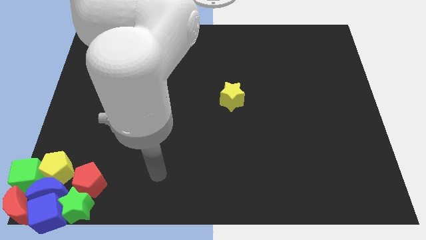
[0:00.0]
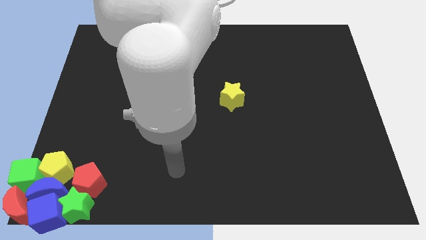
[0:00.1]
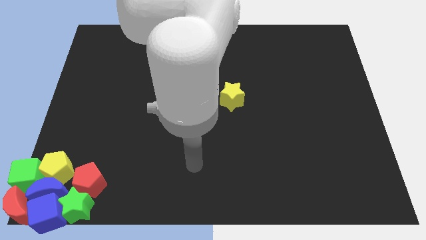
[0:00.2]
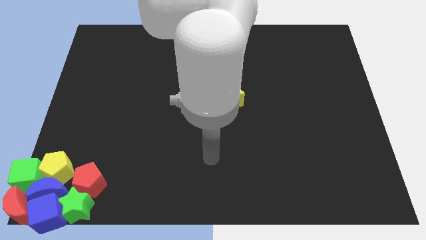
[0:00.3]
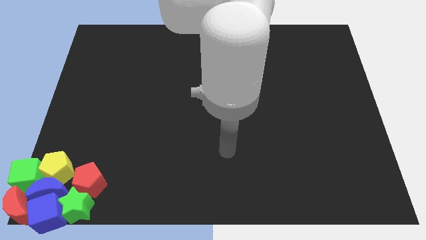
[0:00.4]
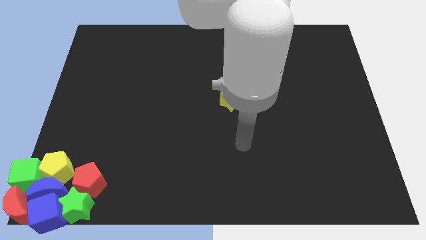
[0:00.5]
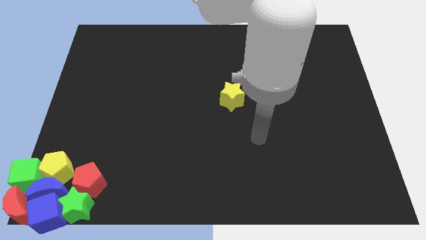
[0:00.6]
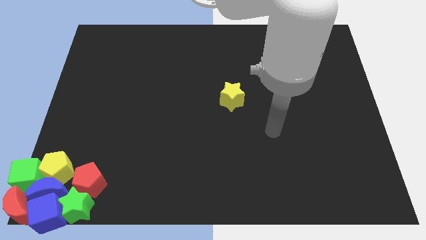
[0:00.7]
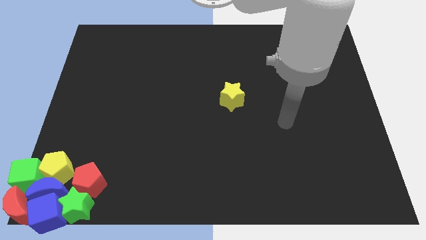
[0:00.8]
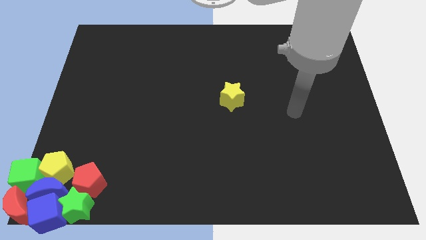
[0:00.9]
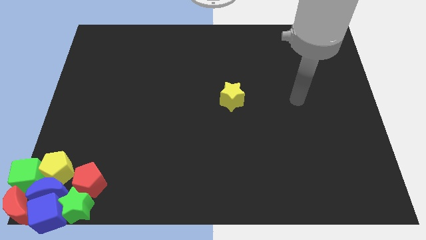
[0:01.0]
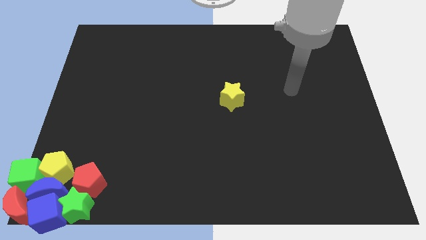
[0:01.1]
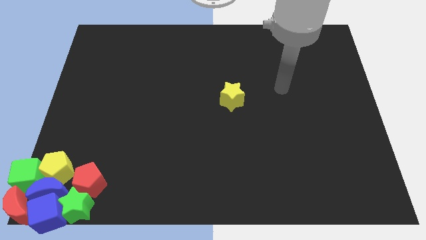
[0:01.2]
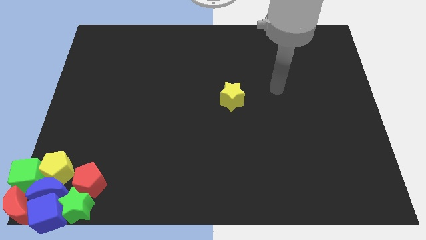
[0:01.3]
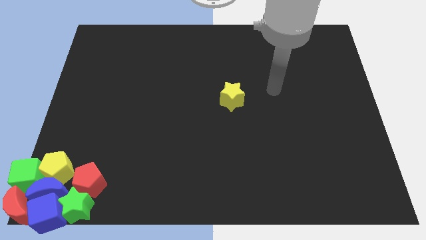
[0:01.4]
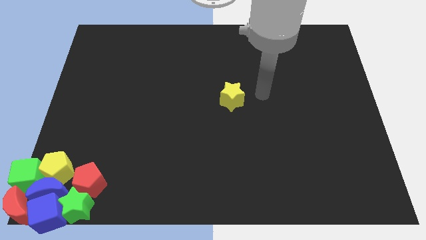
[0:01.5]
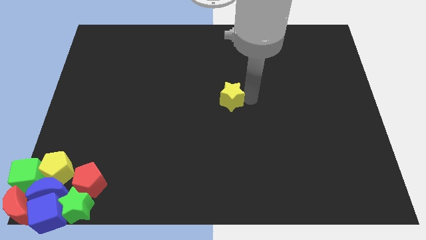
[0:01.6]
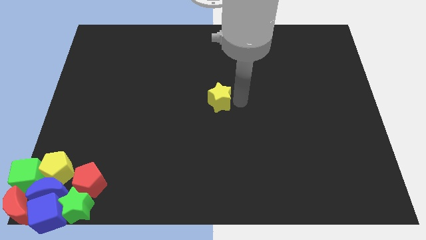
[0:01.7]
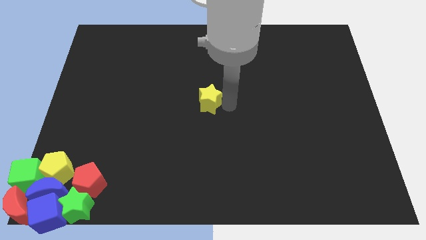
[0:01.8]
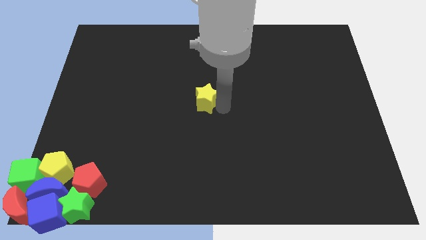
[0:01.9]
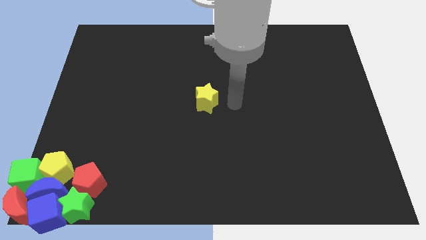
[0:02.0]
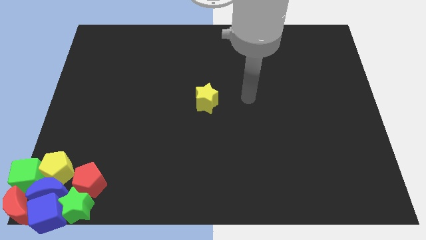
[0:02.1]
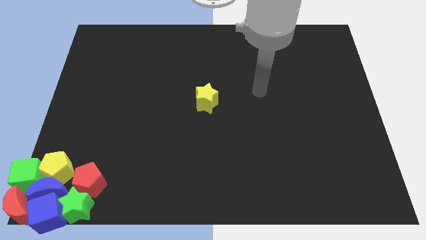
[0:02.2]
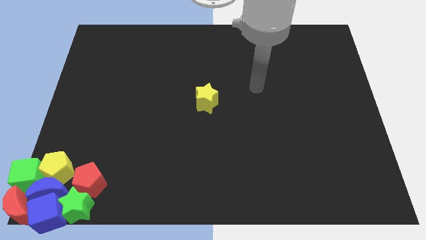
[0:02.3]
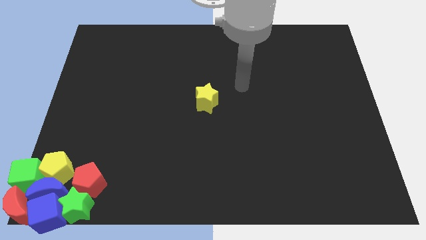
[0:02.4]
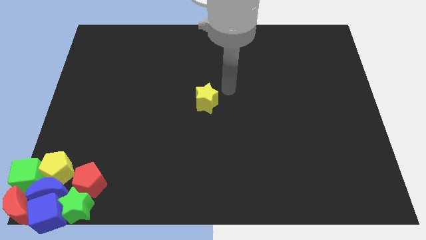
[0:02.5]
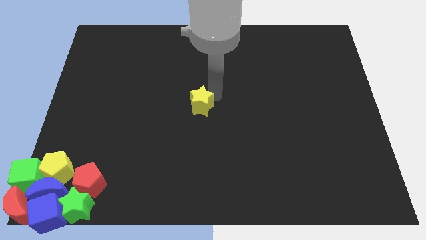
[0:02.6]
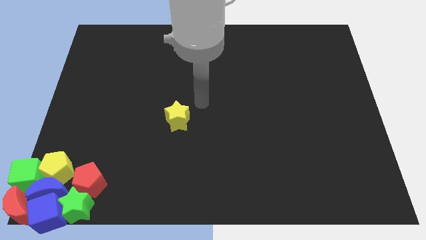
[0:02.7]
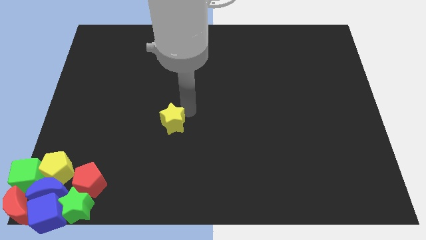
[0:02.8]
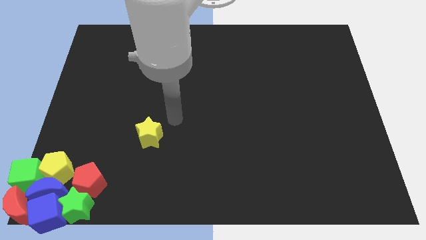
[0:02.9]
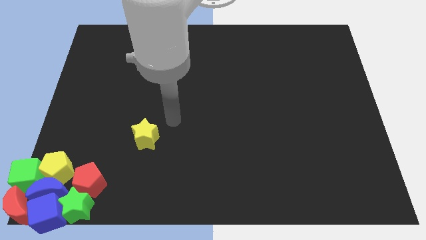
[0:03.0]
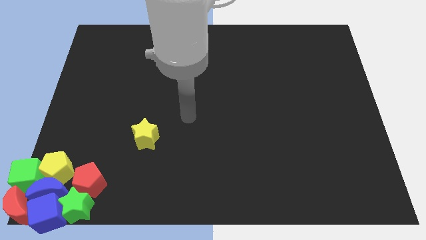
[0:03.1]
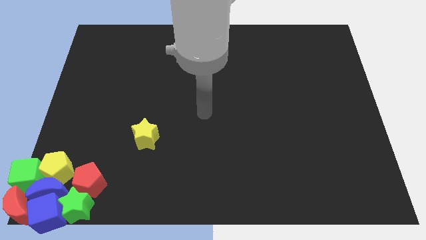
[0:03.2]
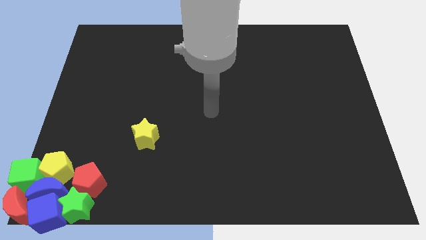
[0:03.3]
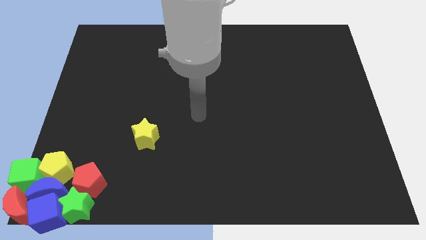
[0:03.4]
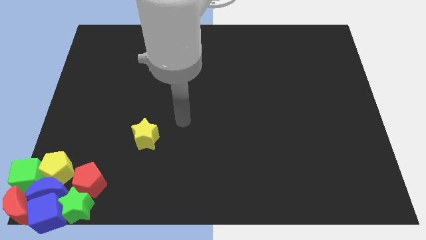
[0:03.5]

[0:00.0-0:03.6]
drag the yellow star diagonally on the top right side of the red pentagon

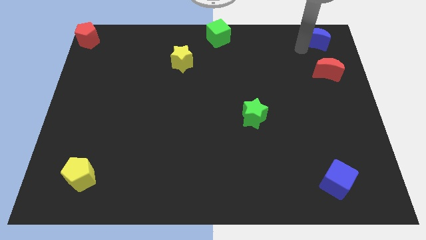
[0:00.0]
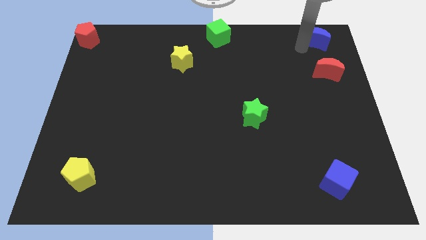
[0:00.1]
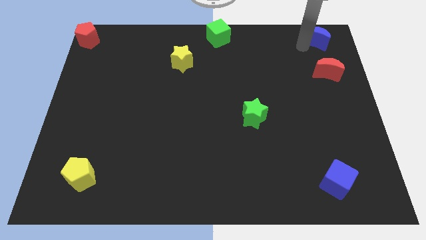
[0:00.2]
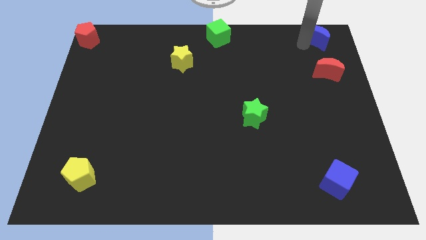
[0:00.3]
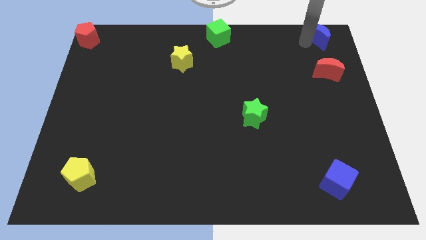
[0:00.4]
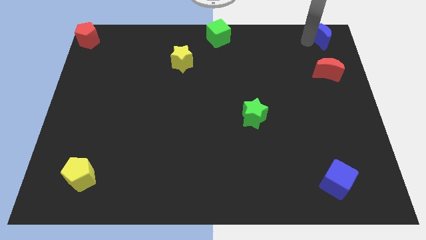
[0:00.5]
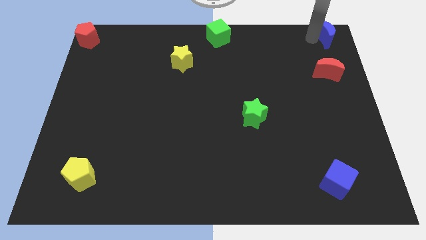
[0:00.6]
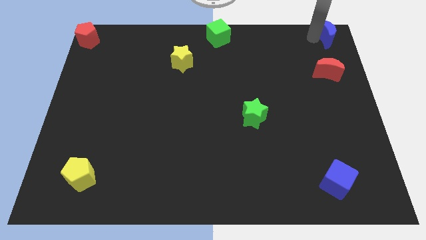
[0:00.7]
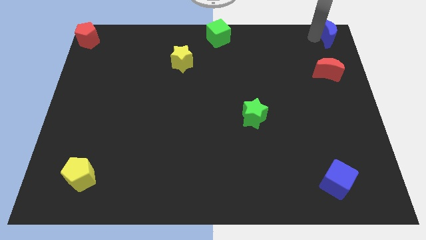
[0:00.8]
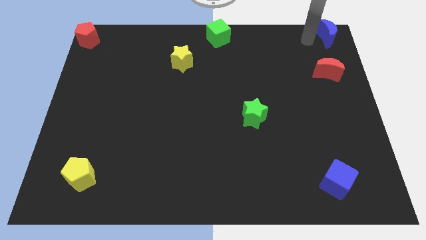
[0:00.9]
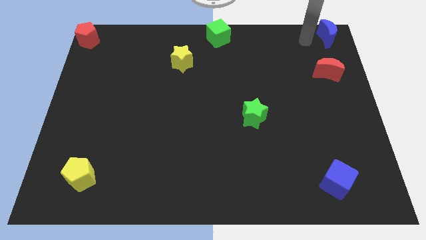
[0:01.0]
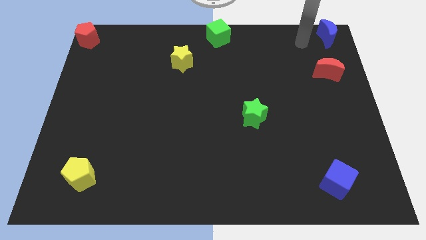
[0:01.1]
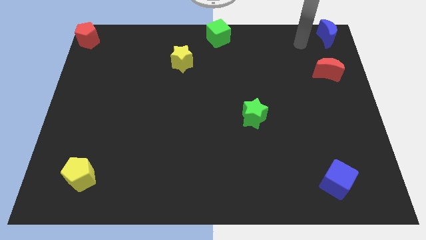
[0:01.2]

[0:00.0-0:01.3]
slide the blue moon to the top right corner

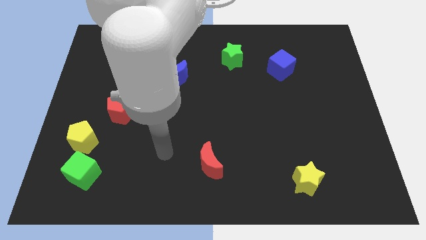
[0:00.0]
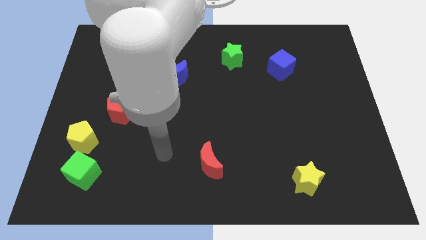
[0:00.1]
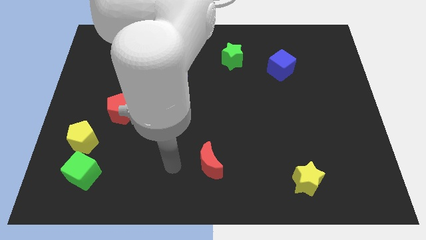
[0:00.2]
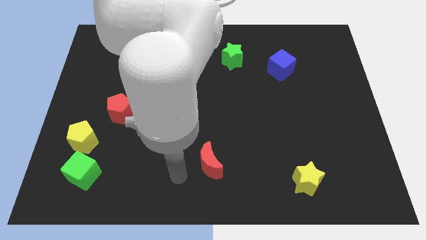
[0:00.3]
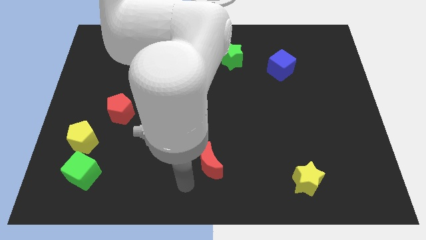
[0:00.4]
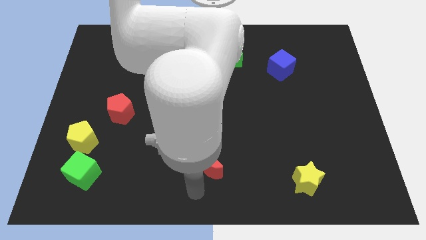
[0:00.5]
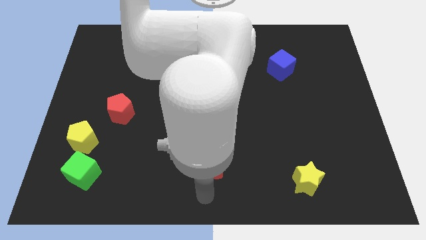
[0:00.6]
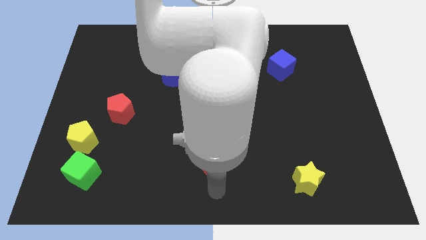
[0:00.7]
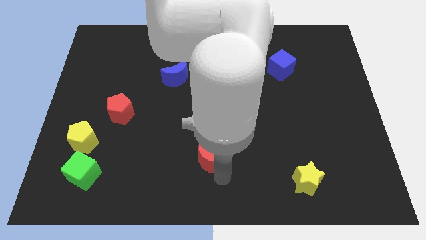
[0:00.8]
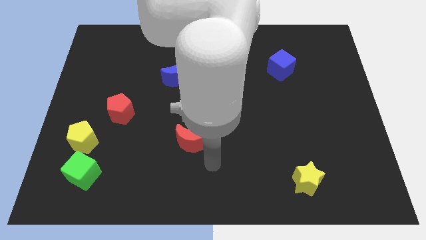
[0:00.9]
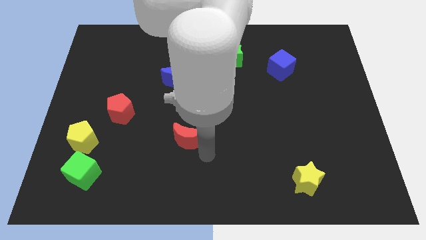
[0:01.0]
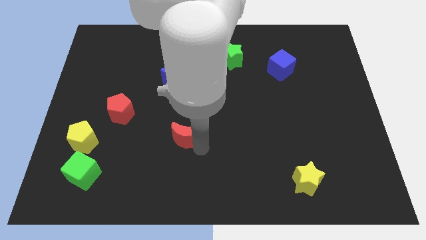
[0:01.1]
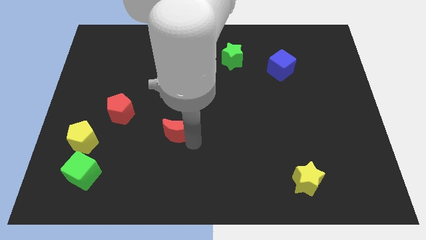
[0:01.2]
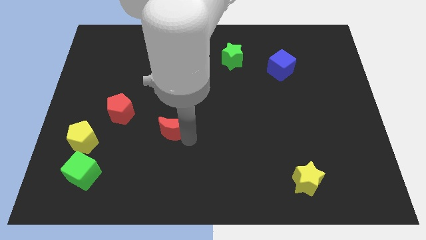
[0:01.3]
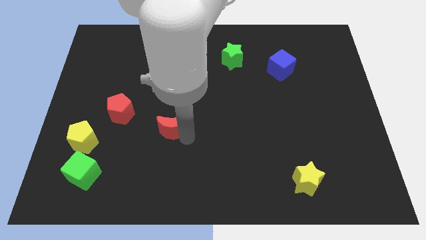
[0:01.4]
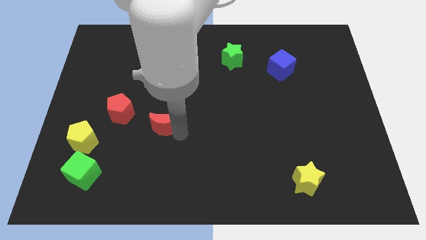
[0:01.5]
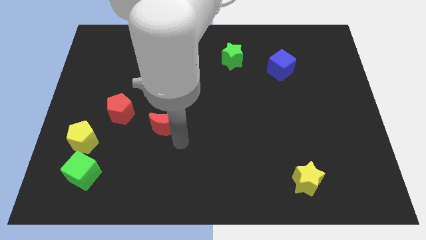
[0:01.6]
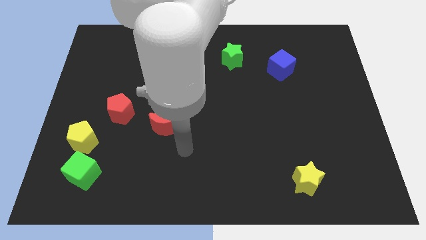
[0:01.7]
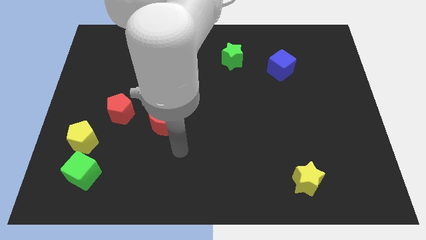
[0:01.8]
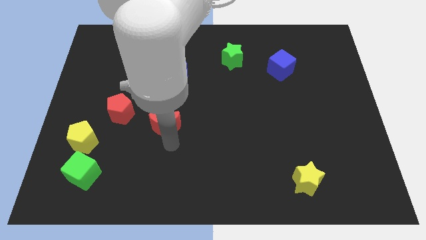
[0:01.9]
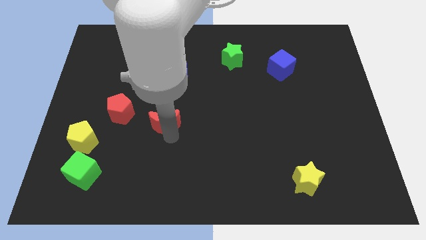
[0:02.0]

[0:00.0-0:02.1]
place the red moon towards red pentagon

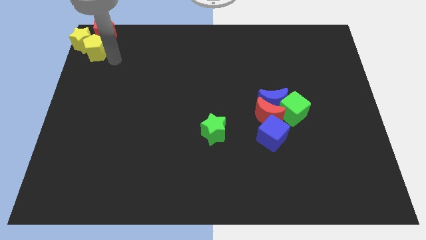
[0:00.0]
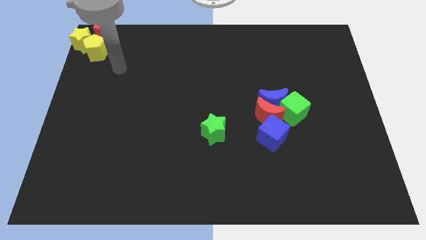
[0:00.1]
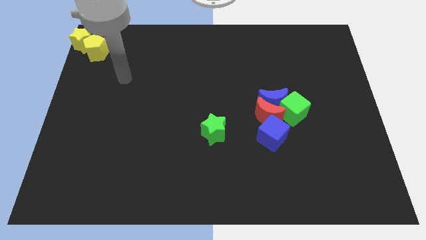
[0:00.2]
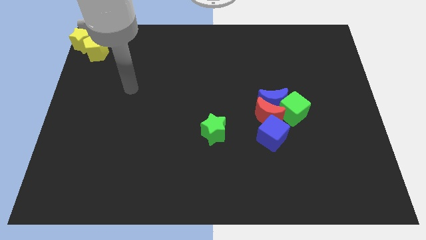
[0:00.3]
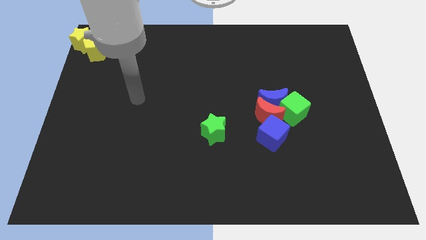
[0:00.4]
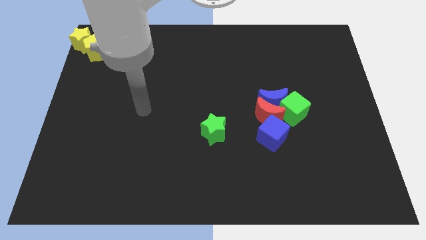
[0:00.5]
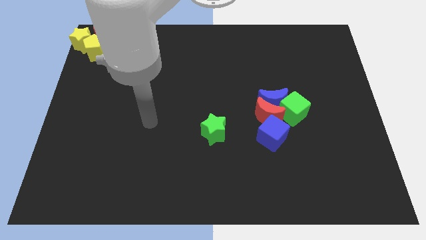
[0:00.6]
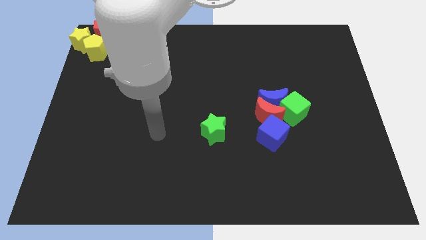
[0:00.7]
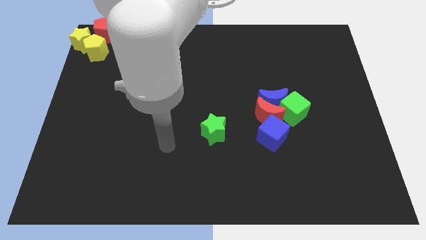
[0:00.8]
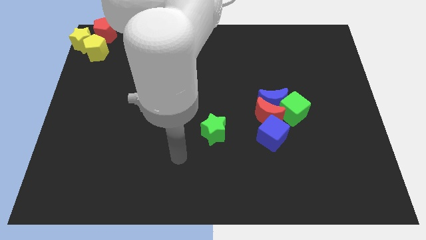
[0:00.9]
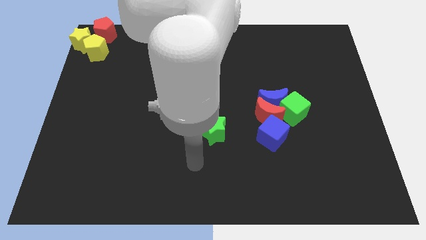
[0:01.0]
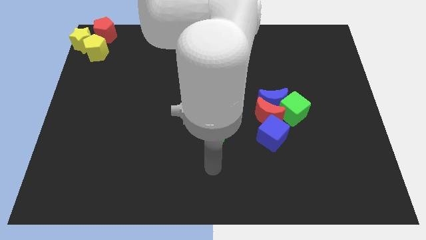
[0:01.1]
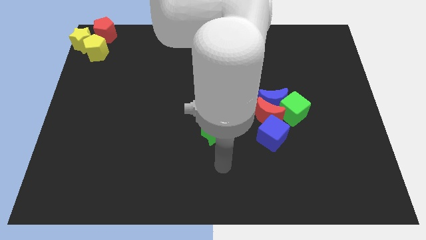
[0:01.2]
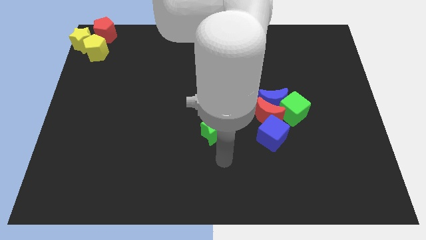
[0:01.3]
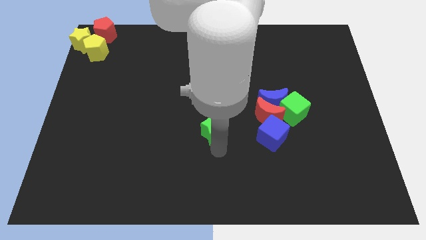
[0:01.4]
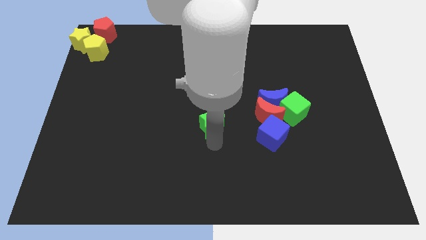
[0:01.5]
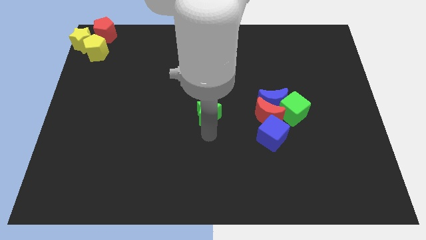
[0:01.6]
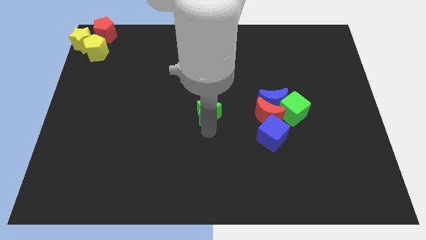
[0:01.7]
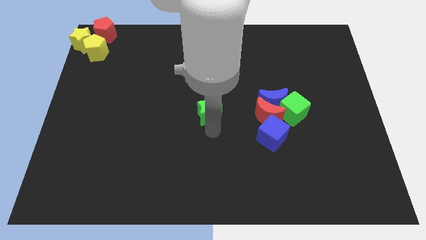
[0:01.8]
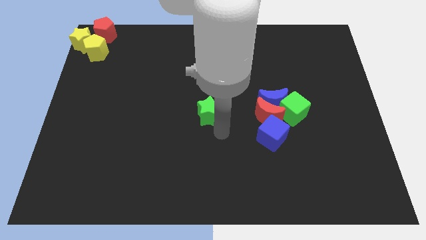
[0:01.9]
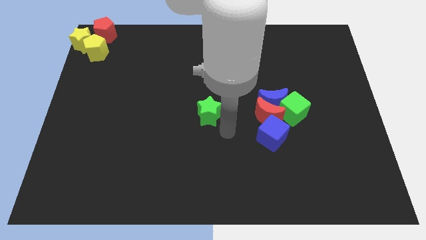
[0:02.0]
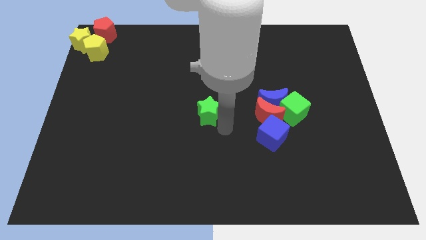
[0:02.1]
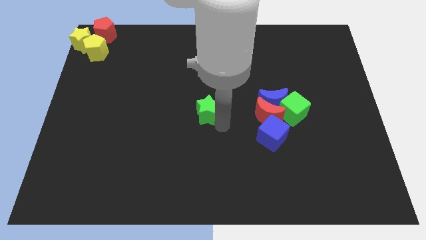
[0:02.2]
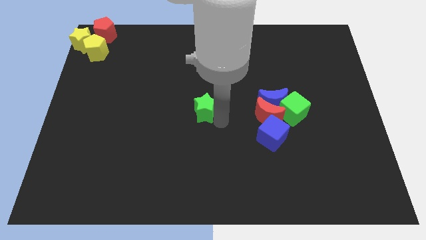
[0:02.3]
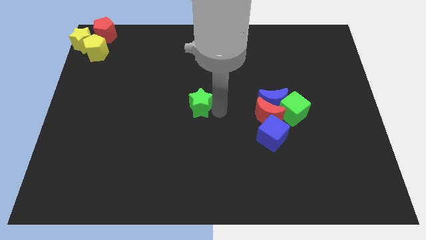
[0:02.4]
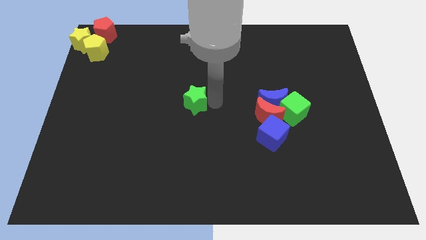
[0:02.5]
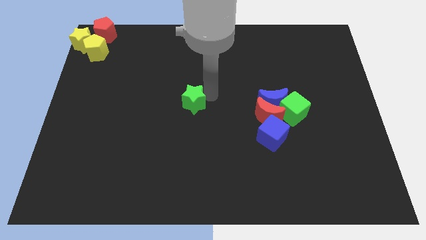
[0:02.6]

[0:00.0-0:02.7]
place the green star at center of the board
